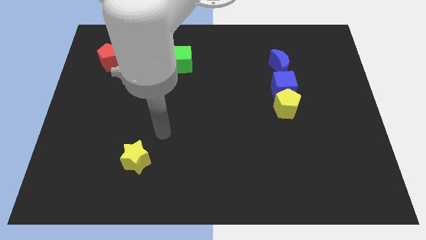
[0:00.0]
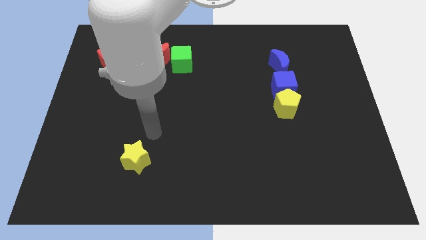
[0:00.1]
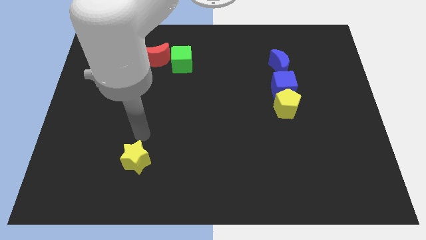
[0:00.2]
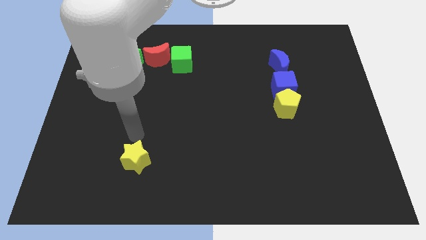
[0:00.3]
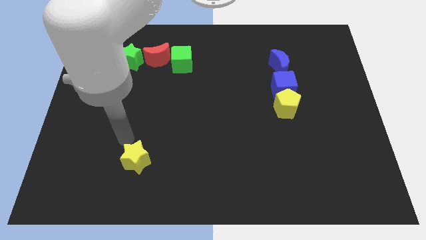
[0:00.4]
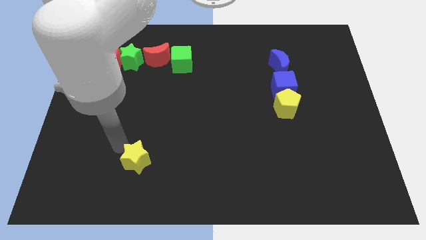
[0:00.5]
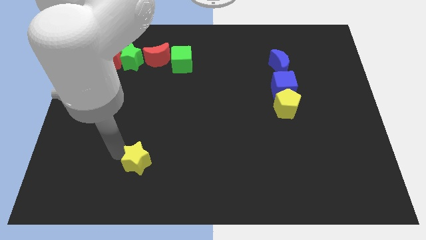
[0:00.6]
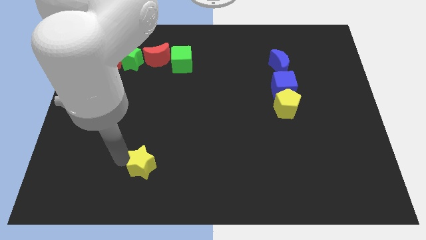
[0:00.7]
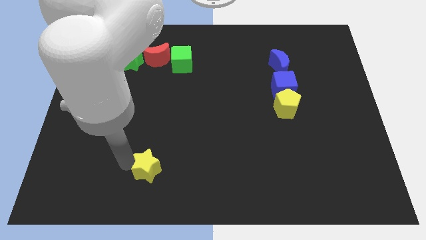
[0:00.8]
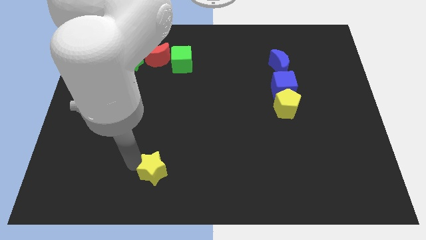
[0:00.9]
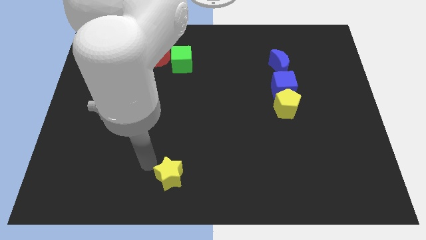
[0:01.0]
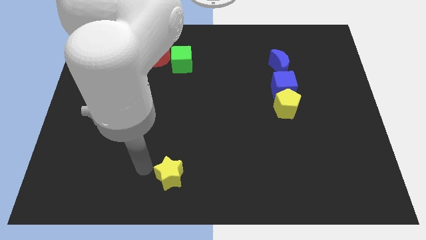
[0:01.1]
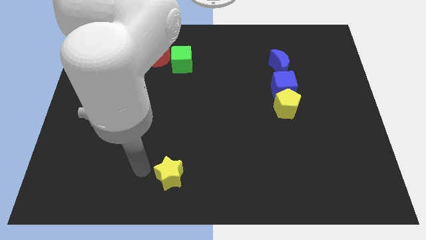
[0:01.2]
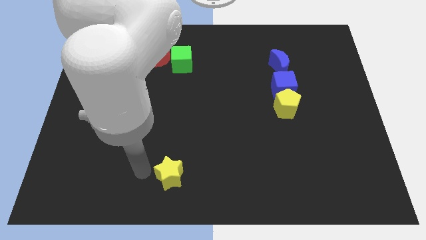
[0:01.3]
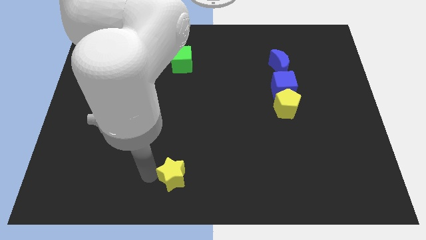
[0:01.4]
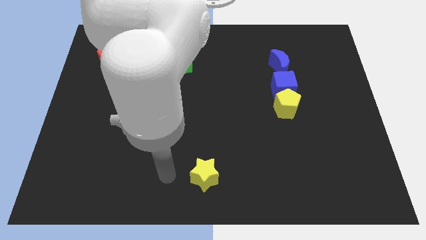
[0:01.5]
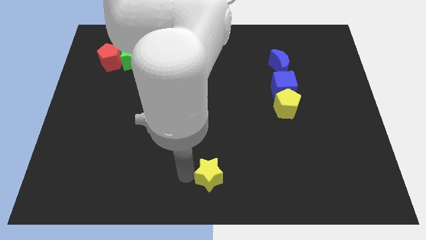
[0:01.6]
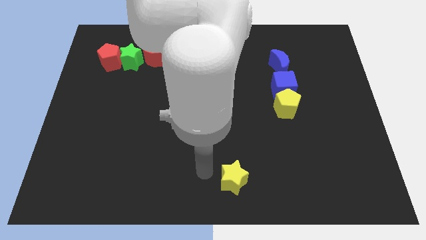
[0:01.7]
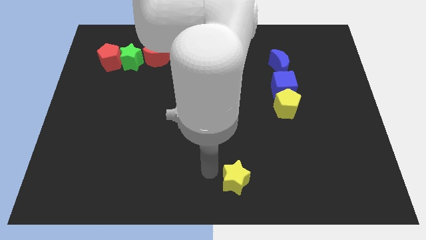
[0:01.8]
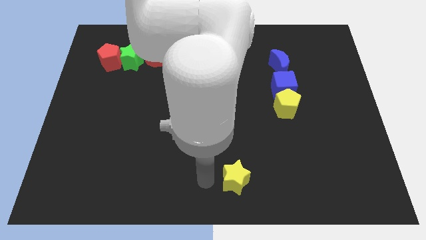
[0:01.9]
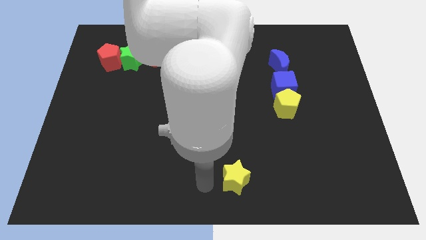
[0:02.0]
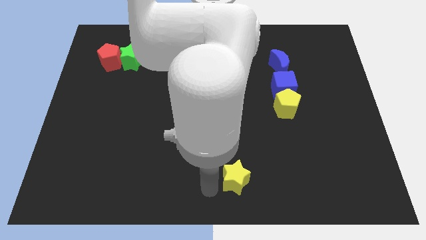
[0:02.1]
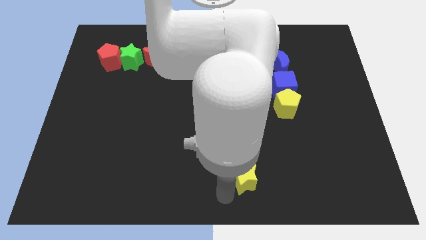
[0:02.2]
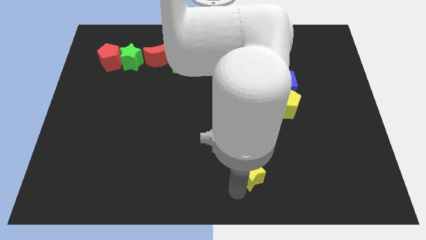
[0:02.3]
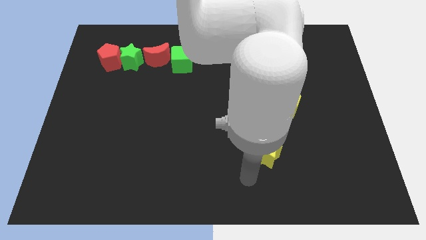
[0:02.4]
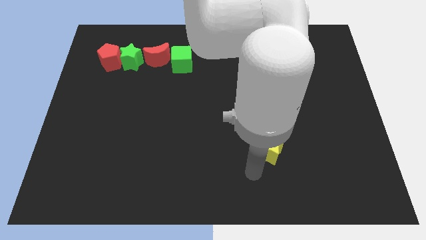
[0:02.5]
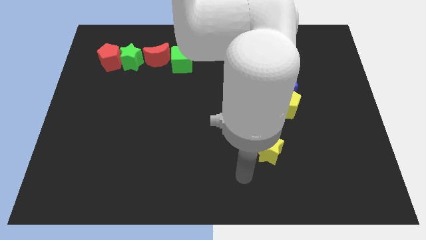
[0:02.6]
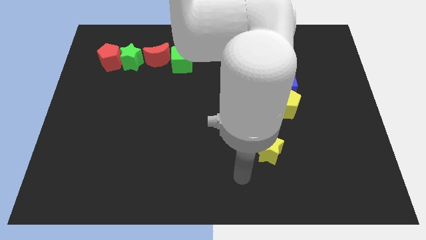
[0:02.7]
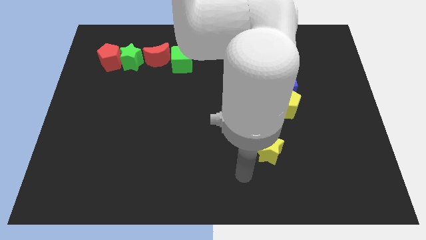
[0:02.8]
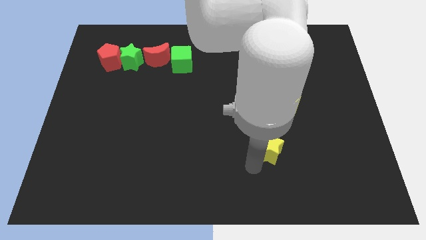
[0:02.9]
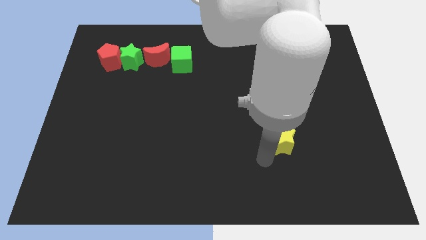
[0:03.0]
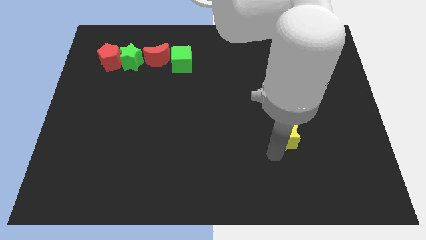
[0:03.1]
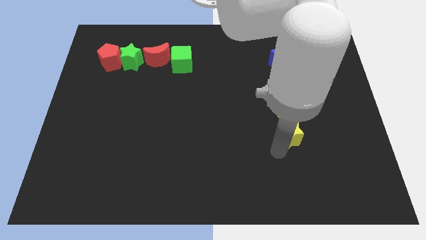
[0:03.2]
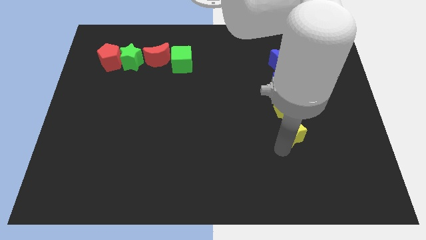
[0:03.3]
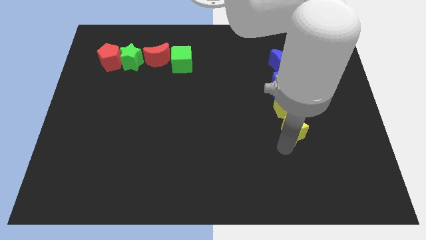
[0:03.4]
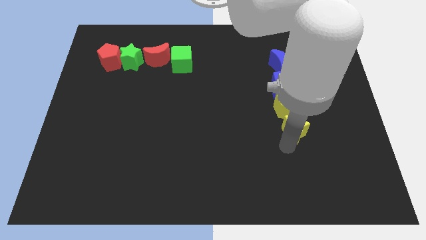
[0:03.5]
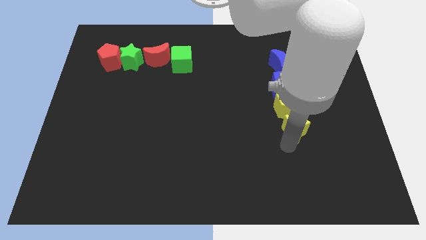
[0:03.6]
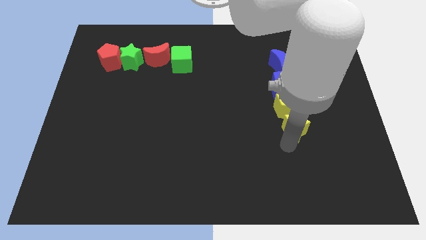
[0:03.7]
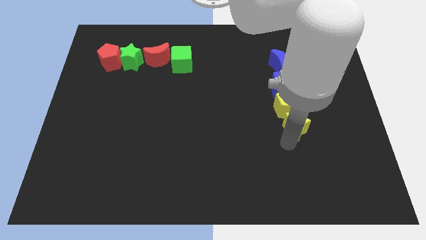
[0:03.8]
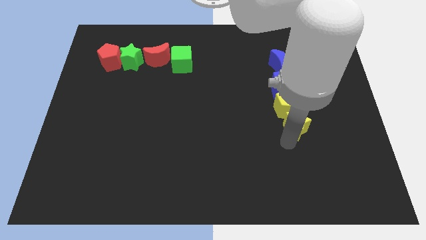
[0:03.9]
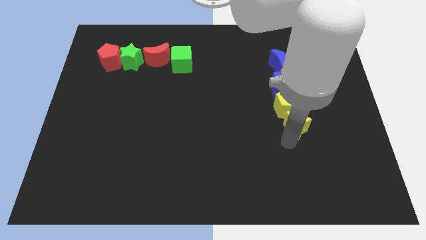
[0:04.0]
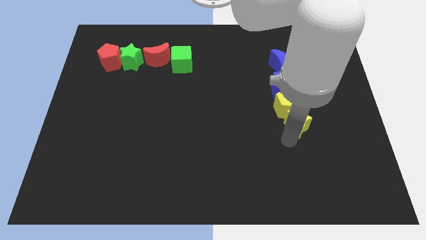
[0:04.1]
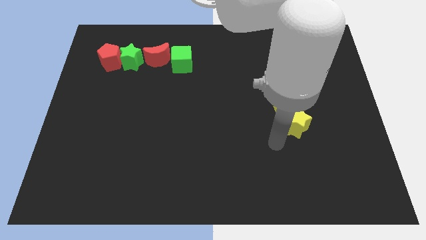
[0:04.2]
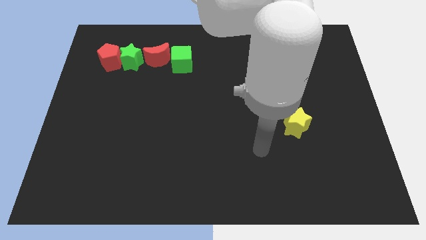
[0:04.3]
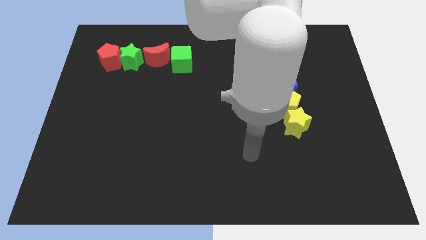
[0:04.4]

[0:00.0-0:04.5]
move yellow star close to the yellow pentagon

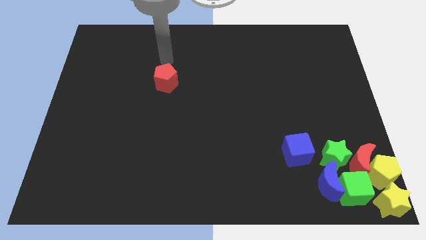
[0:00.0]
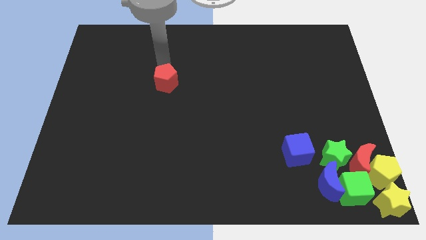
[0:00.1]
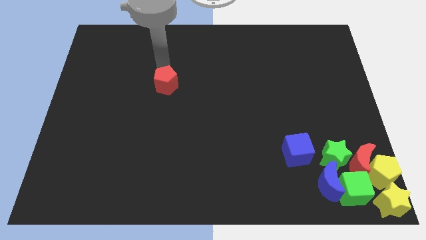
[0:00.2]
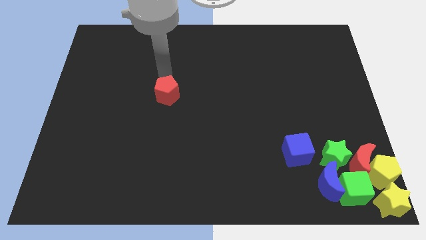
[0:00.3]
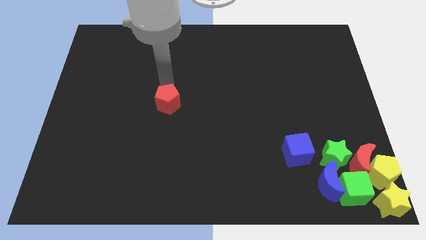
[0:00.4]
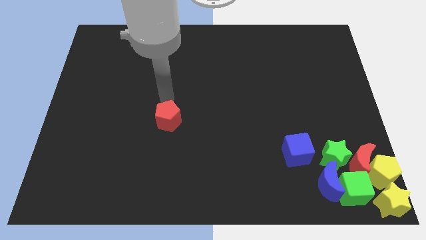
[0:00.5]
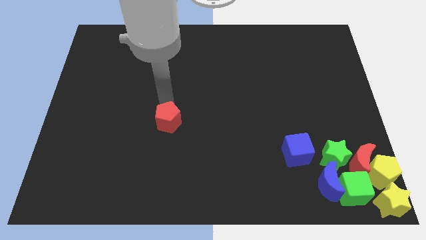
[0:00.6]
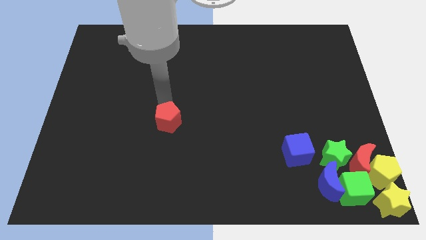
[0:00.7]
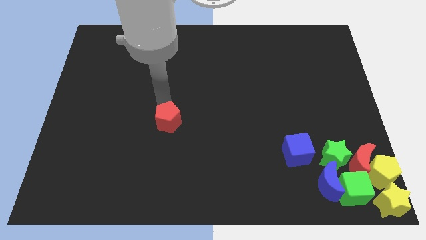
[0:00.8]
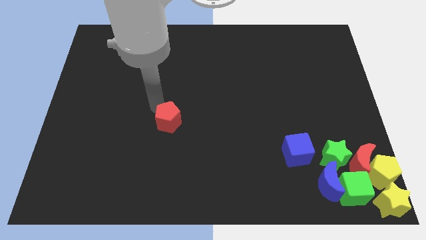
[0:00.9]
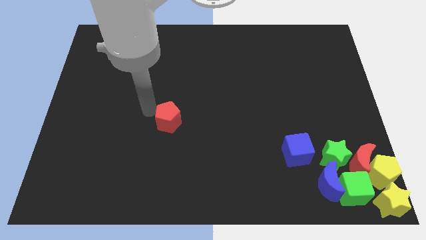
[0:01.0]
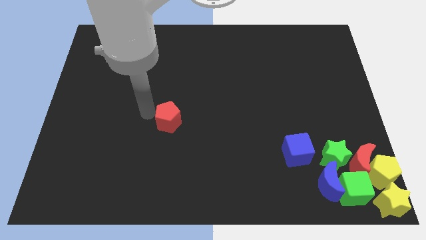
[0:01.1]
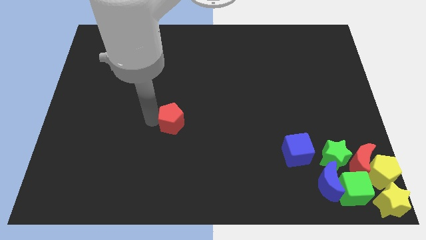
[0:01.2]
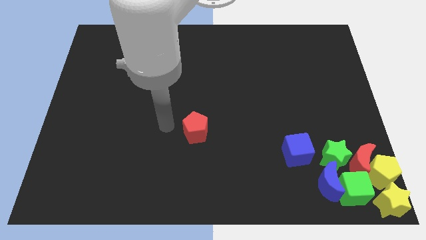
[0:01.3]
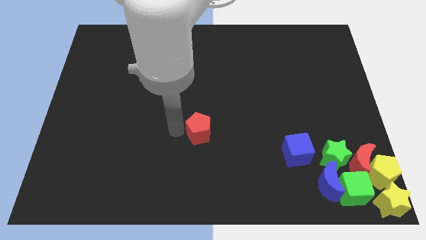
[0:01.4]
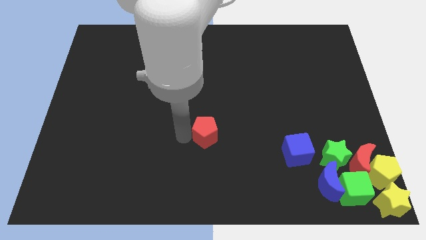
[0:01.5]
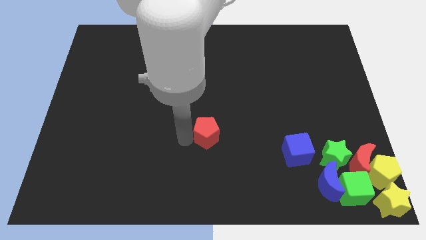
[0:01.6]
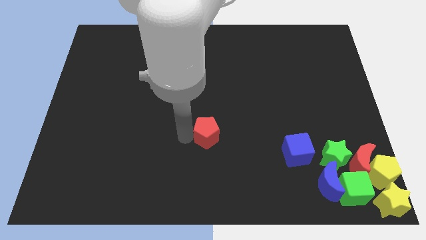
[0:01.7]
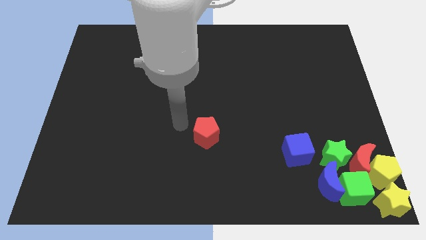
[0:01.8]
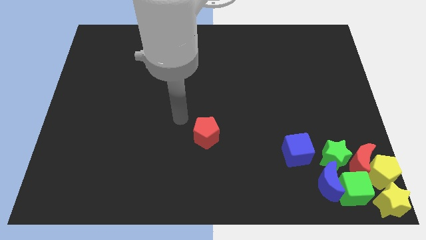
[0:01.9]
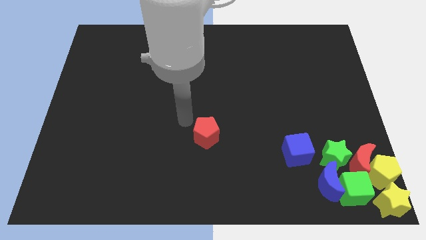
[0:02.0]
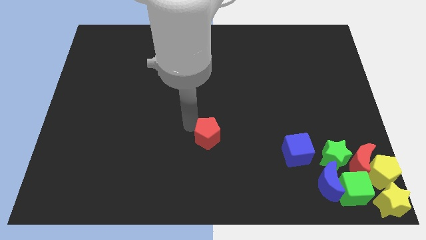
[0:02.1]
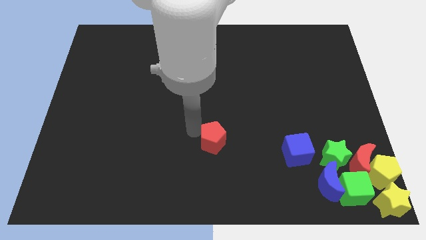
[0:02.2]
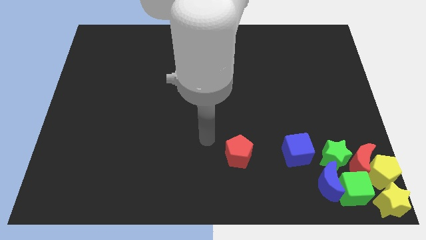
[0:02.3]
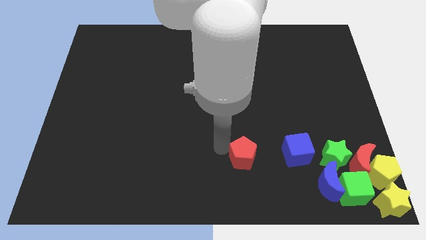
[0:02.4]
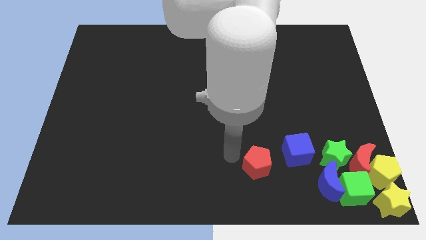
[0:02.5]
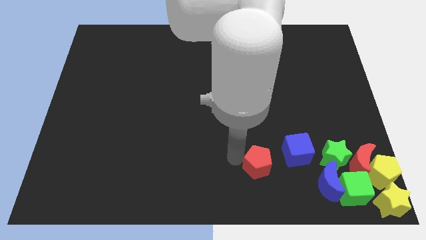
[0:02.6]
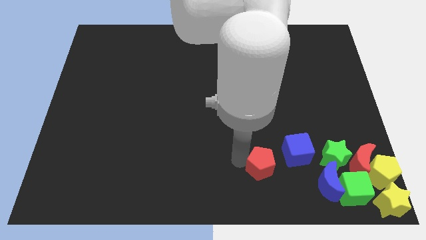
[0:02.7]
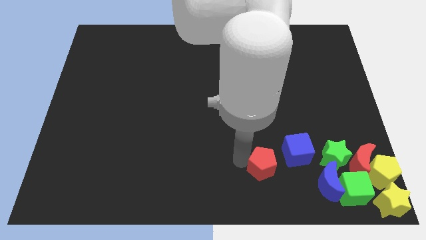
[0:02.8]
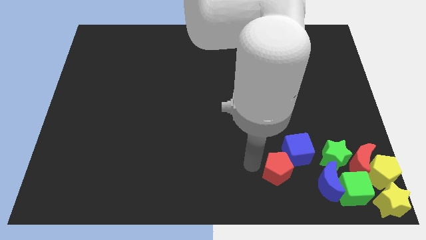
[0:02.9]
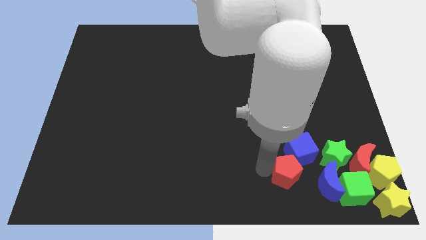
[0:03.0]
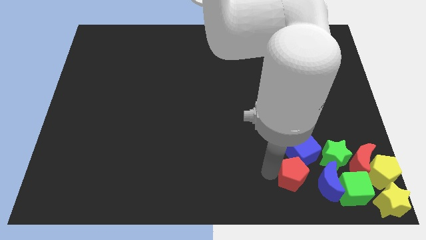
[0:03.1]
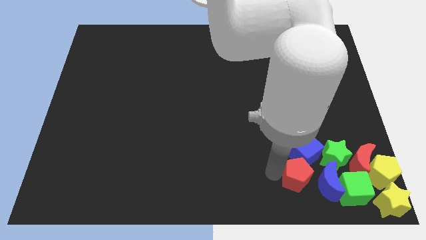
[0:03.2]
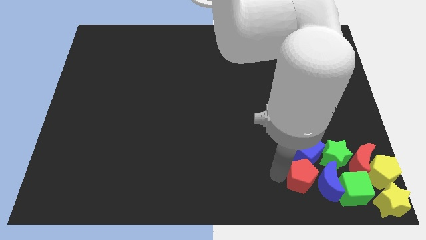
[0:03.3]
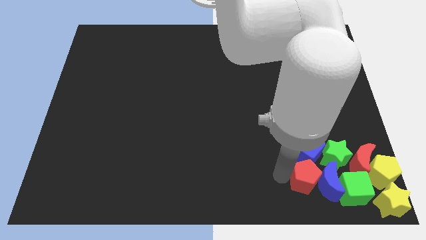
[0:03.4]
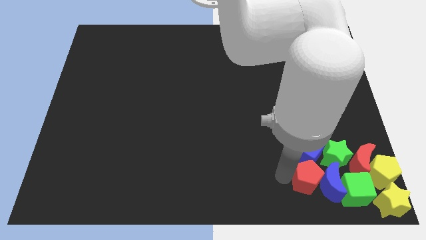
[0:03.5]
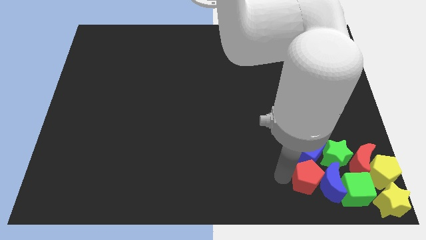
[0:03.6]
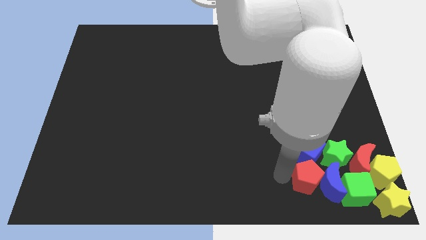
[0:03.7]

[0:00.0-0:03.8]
drag the red pentagon into the group of blocks

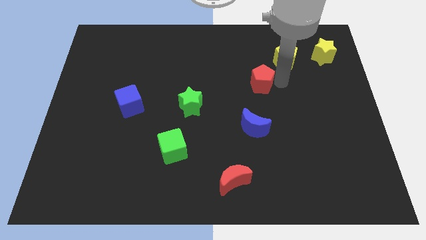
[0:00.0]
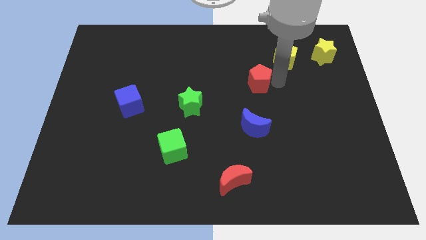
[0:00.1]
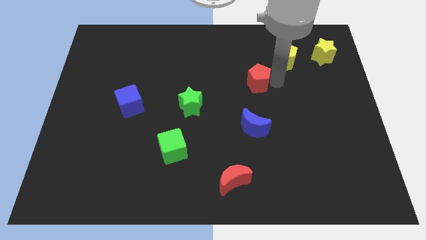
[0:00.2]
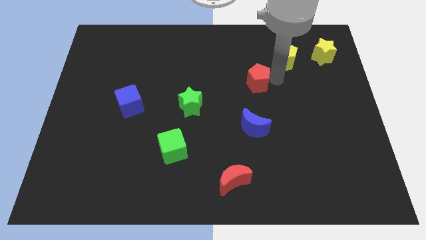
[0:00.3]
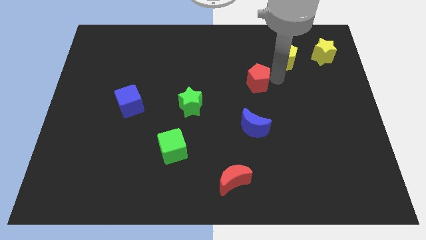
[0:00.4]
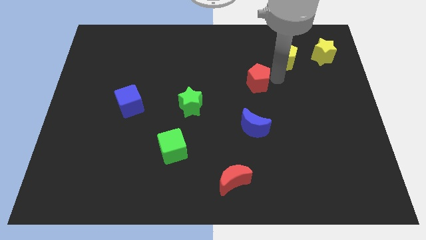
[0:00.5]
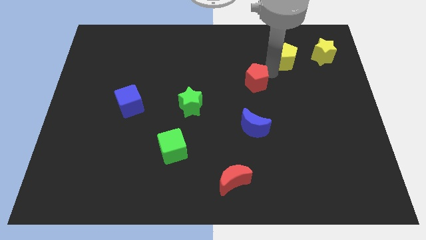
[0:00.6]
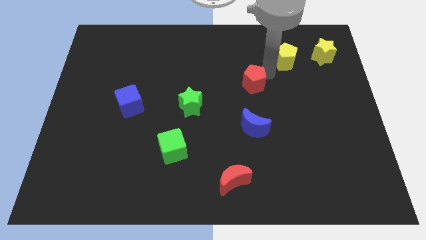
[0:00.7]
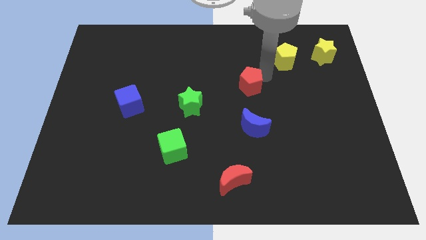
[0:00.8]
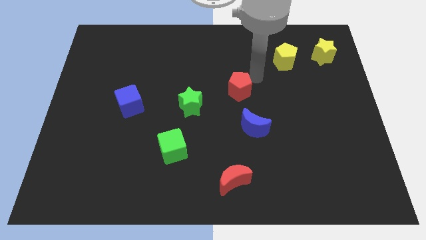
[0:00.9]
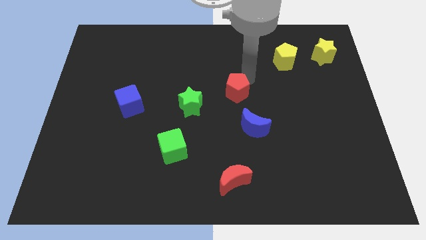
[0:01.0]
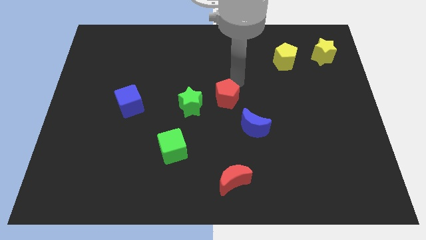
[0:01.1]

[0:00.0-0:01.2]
place the red pentagon diagonal to the blue moon
